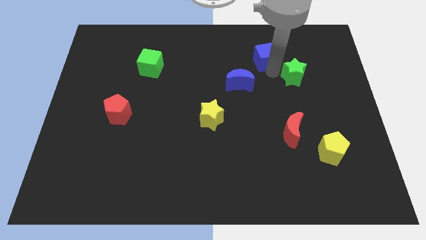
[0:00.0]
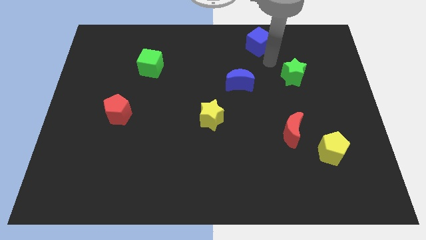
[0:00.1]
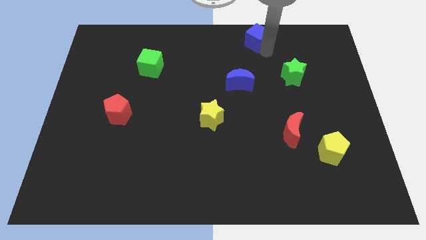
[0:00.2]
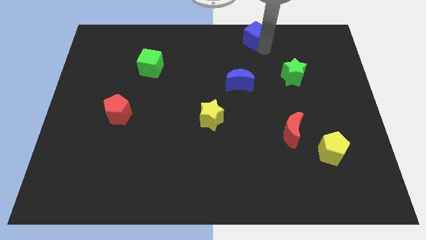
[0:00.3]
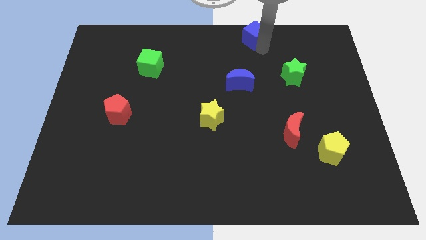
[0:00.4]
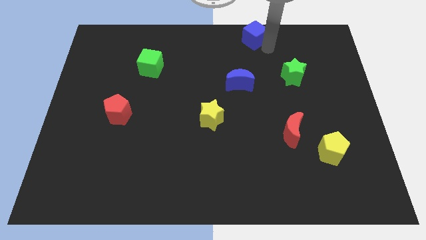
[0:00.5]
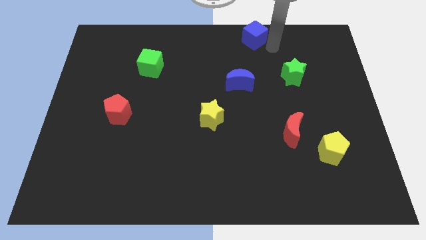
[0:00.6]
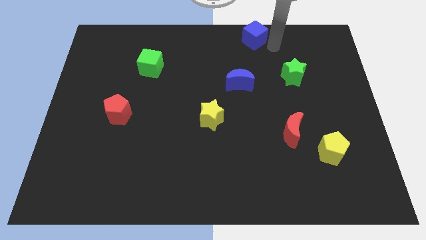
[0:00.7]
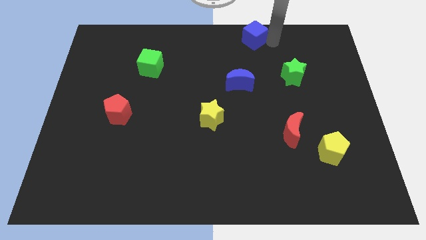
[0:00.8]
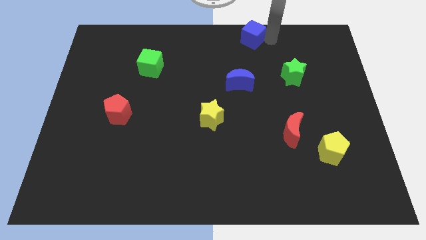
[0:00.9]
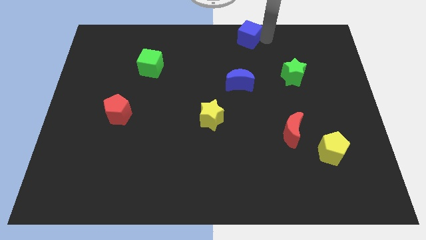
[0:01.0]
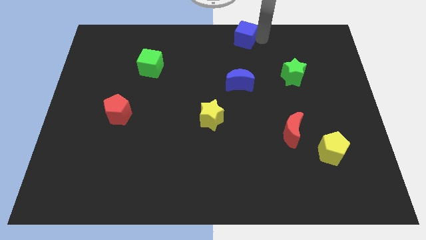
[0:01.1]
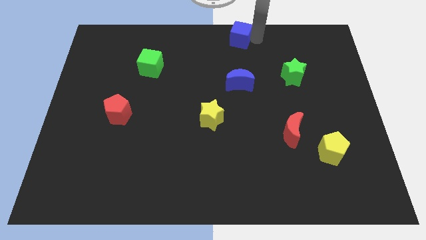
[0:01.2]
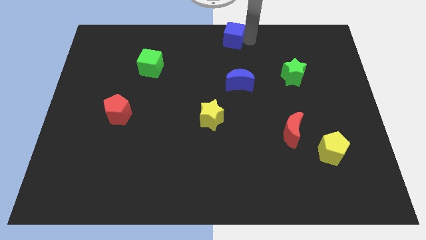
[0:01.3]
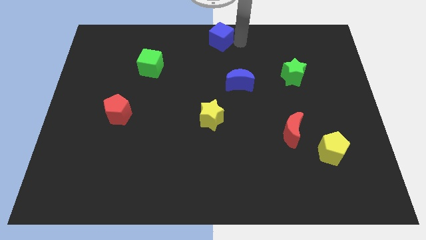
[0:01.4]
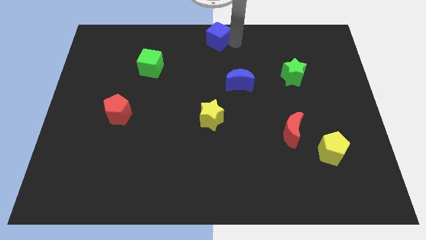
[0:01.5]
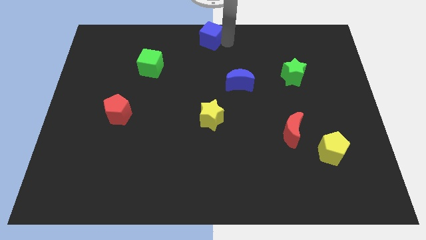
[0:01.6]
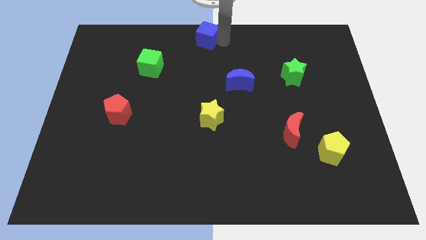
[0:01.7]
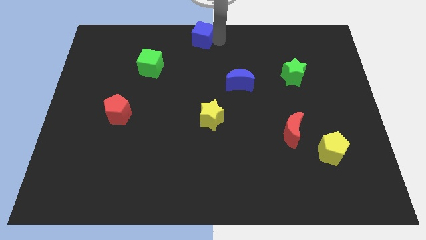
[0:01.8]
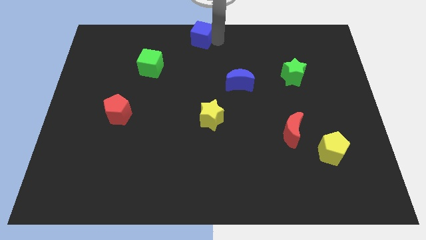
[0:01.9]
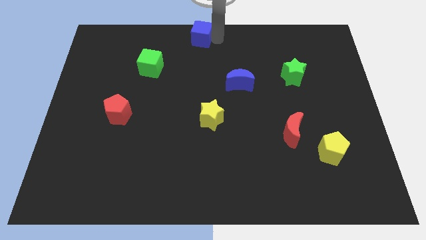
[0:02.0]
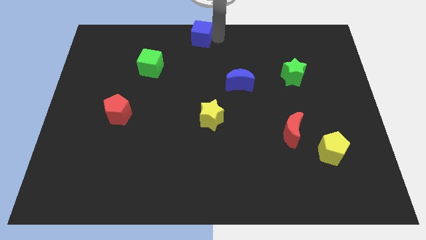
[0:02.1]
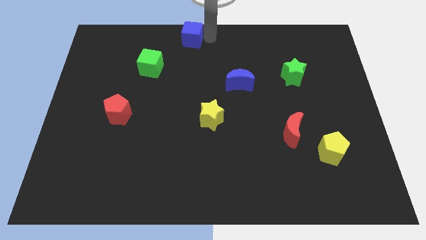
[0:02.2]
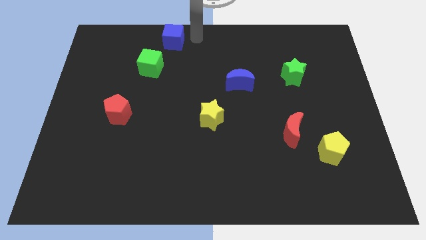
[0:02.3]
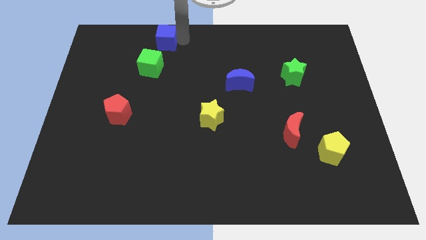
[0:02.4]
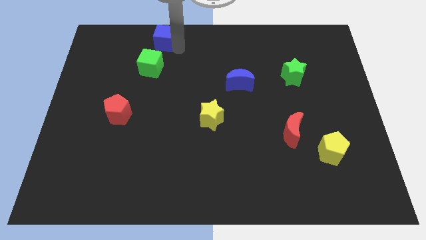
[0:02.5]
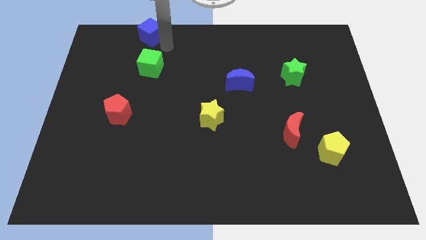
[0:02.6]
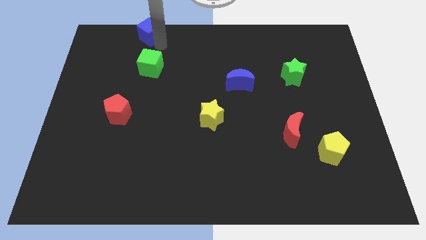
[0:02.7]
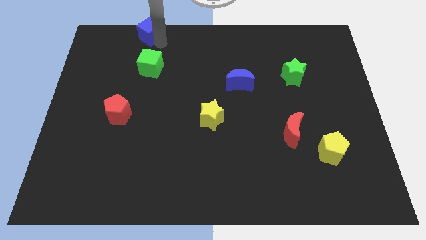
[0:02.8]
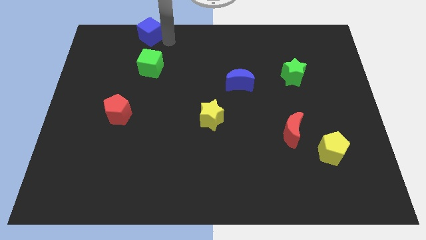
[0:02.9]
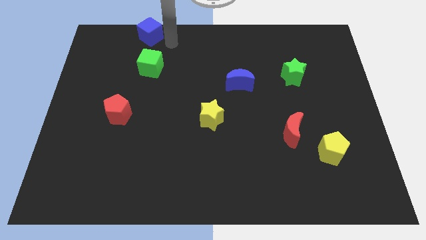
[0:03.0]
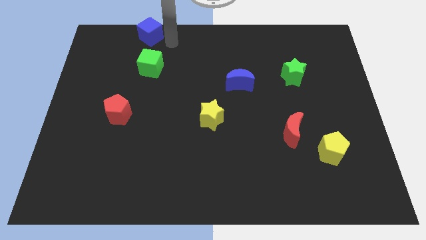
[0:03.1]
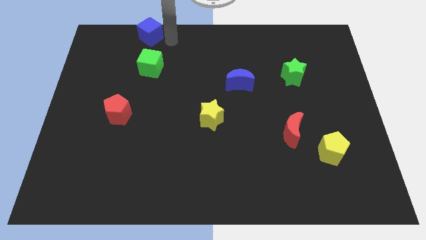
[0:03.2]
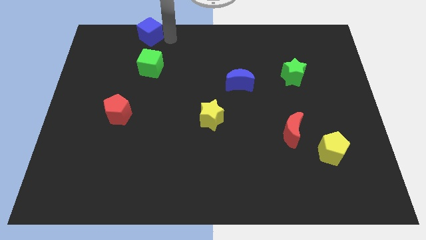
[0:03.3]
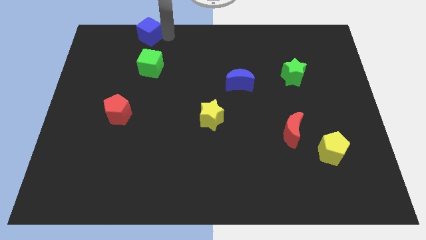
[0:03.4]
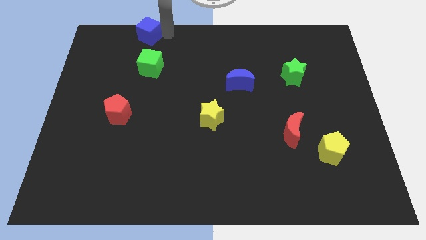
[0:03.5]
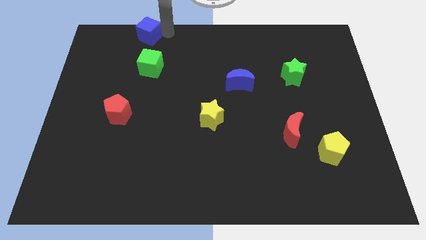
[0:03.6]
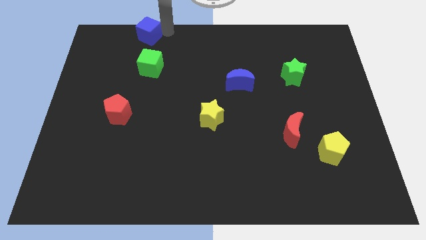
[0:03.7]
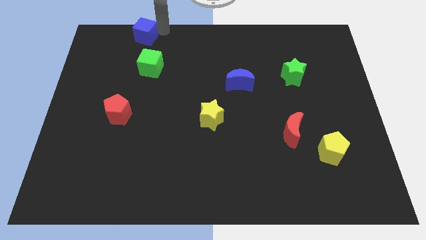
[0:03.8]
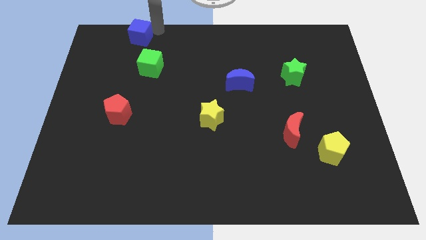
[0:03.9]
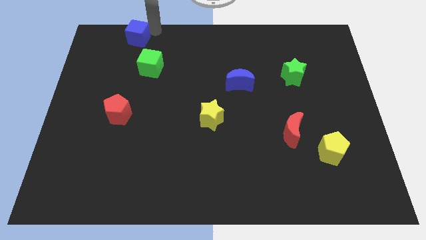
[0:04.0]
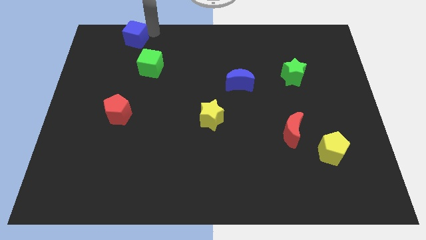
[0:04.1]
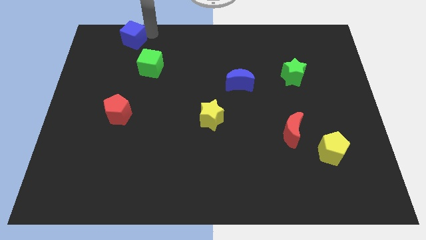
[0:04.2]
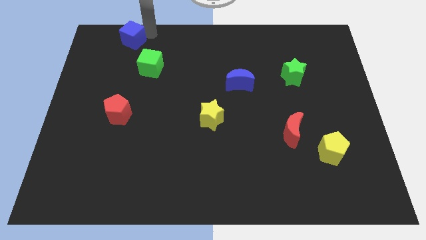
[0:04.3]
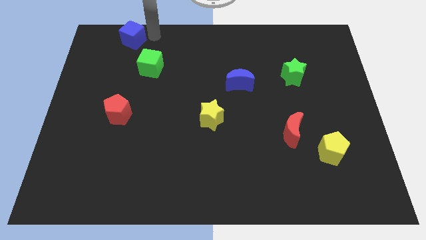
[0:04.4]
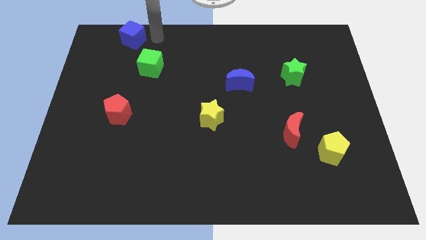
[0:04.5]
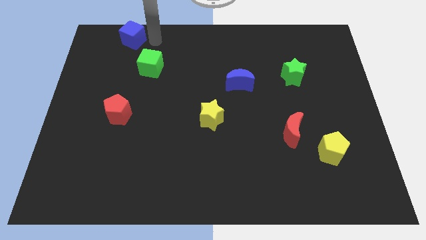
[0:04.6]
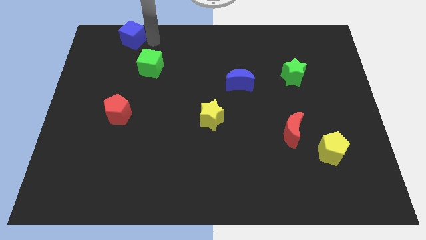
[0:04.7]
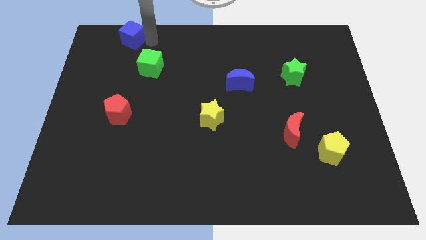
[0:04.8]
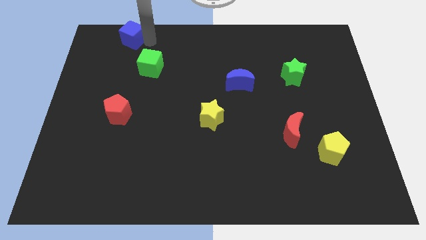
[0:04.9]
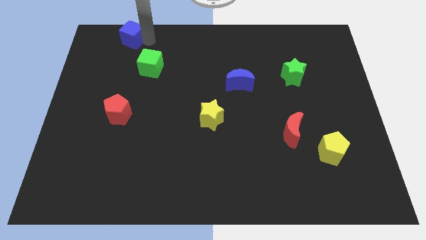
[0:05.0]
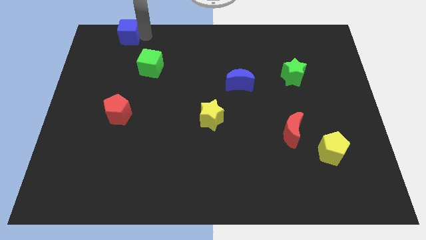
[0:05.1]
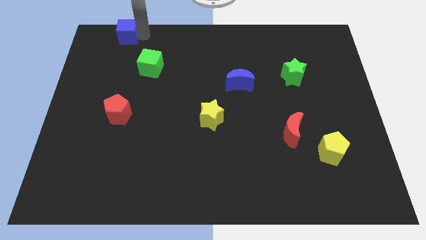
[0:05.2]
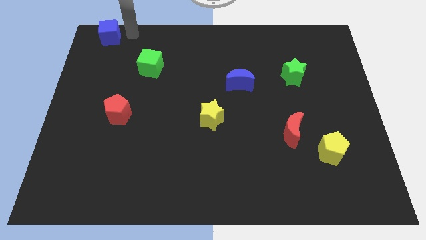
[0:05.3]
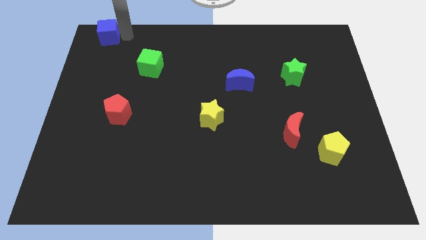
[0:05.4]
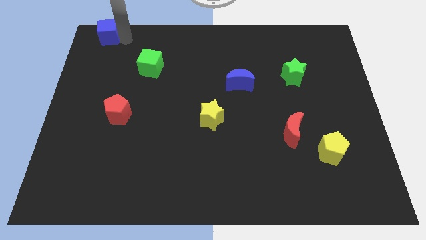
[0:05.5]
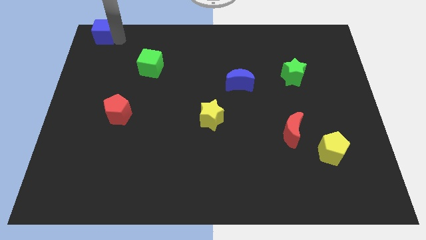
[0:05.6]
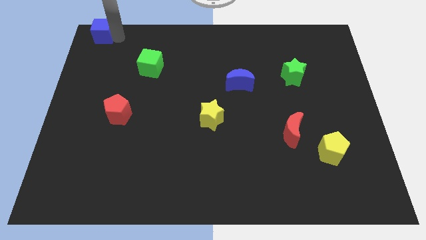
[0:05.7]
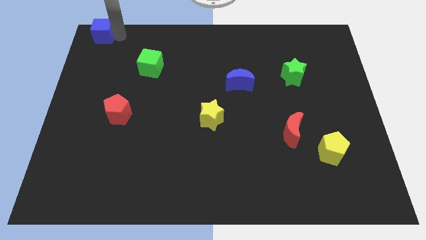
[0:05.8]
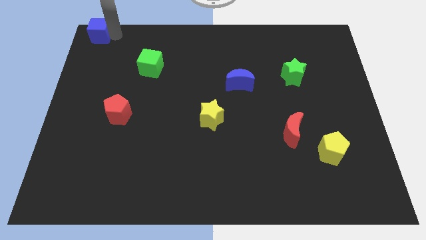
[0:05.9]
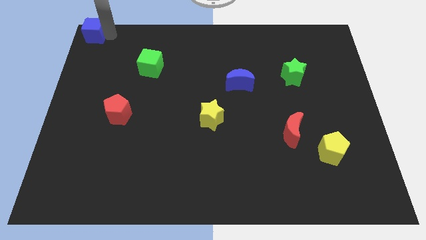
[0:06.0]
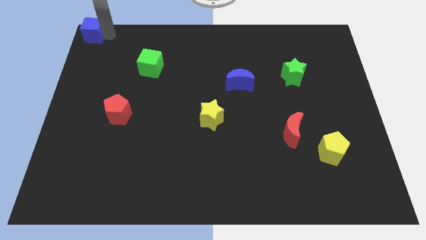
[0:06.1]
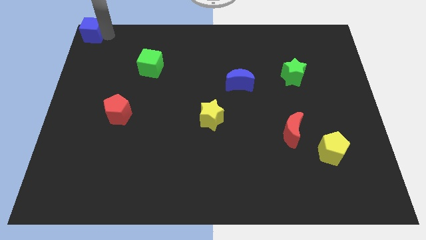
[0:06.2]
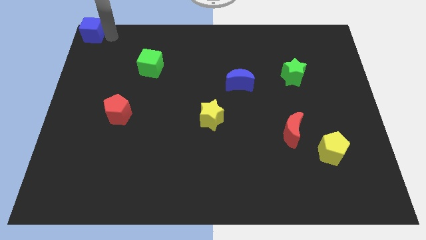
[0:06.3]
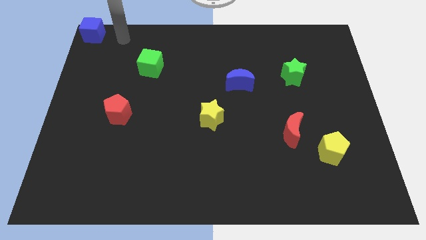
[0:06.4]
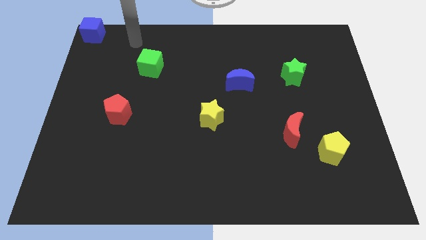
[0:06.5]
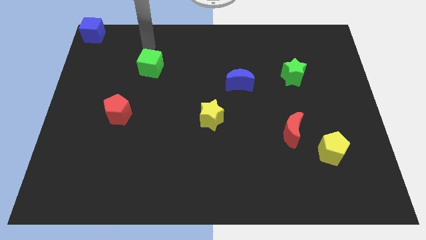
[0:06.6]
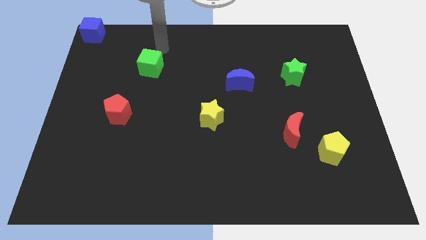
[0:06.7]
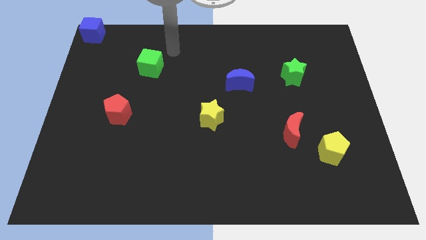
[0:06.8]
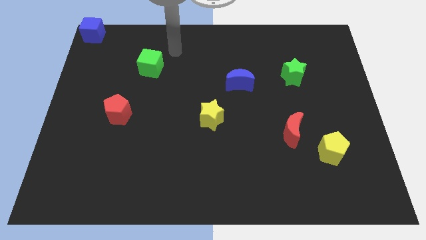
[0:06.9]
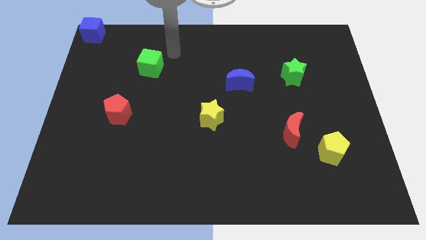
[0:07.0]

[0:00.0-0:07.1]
place the blue cube at the top left corner of the board

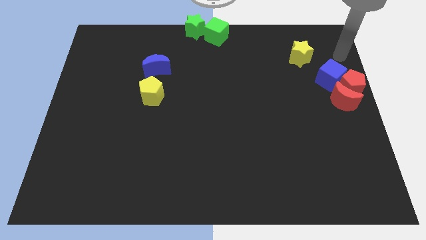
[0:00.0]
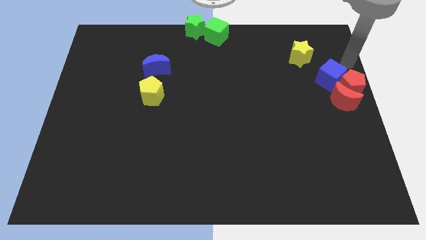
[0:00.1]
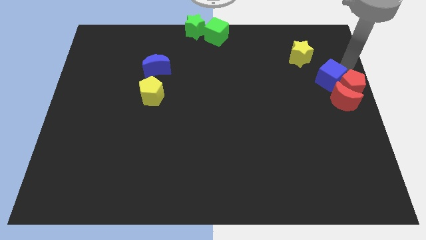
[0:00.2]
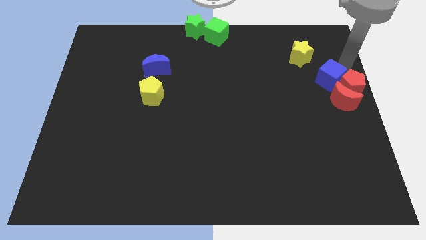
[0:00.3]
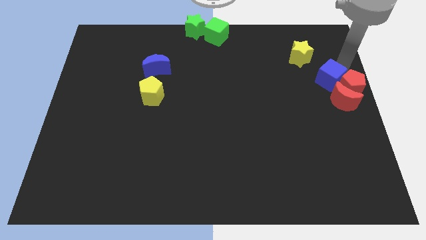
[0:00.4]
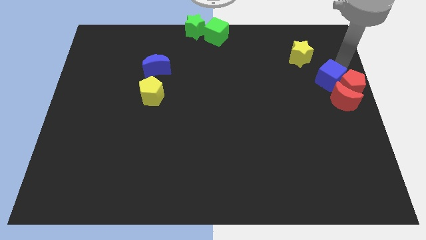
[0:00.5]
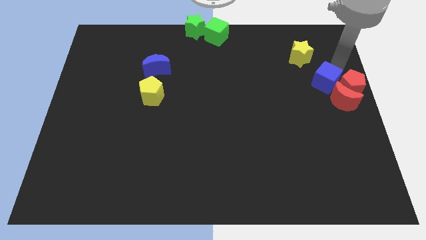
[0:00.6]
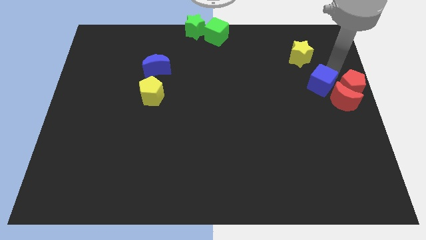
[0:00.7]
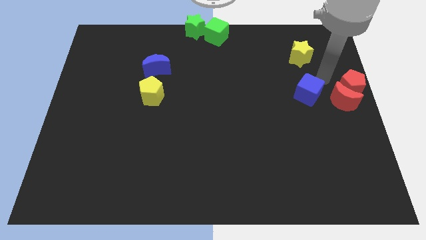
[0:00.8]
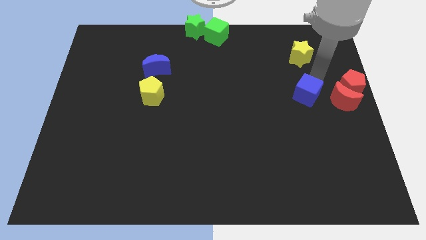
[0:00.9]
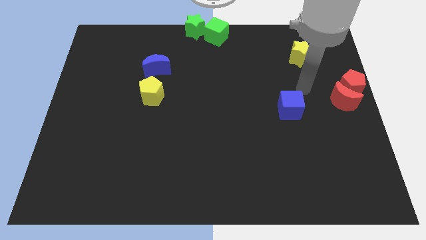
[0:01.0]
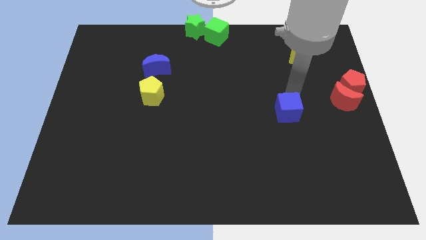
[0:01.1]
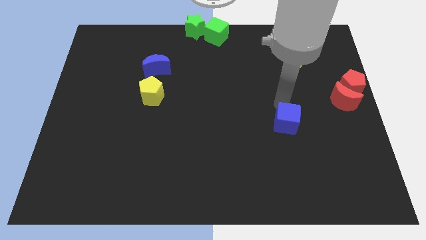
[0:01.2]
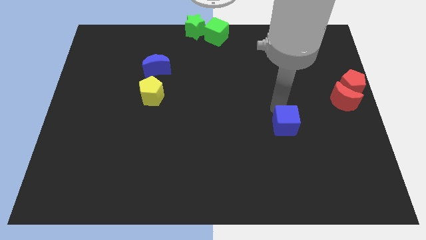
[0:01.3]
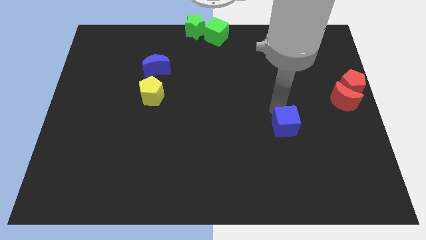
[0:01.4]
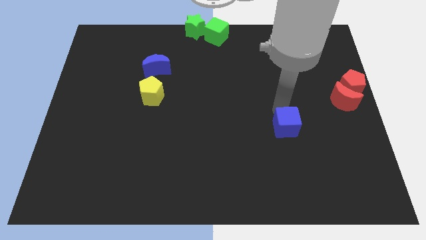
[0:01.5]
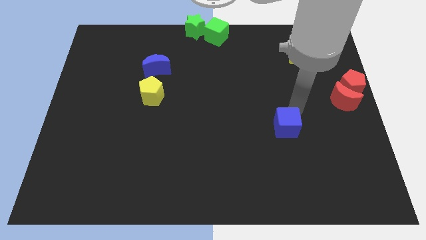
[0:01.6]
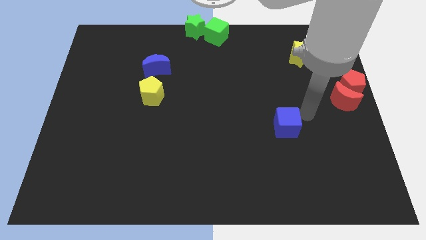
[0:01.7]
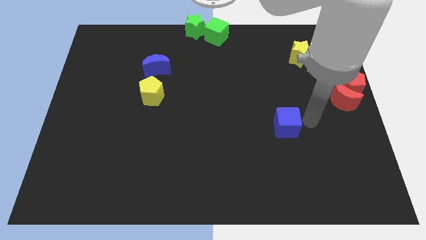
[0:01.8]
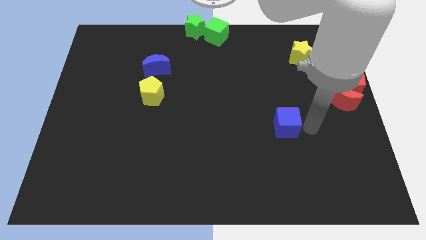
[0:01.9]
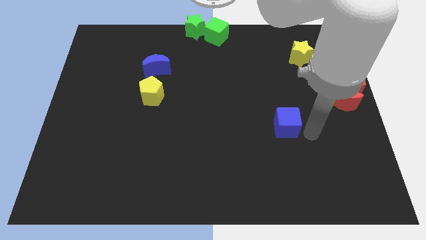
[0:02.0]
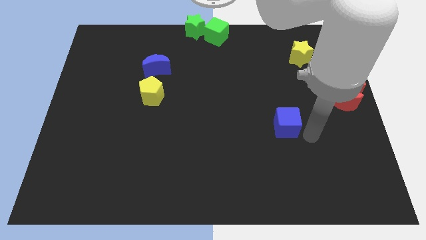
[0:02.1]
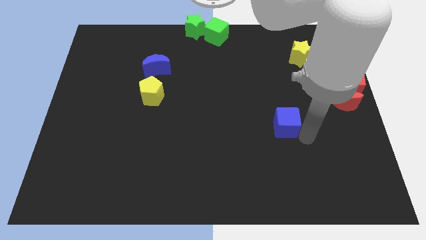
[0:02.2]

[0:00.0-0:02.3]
move the blue cube towards the bottom side
